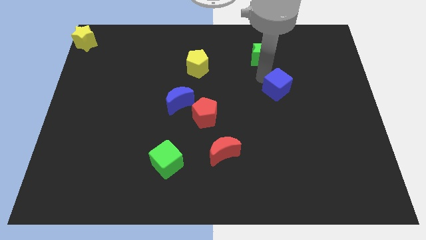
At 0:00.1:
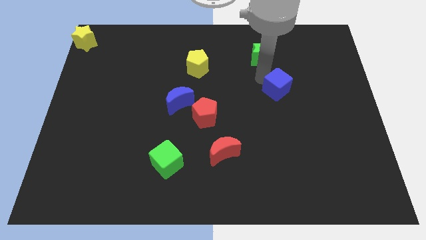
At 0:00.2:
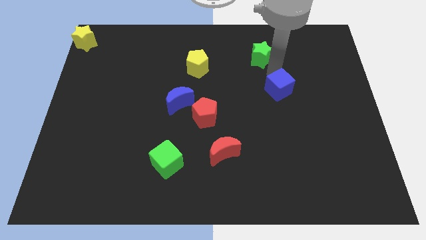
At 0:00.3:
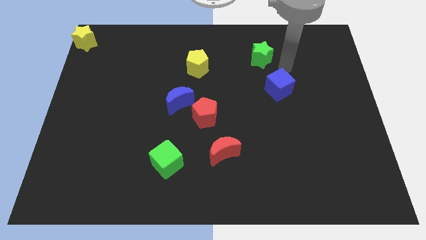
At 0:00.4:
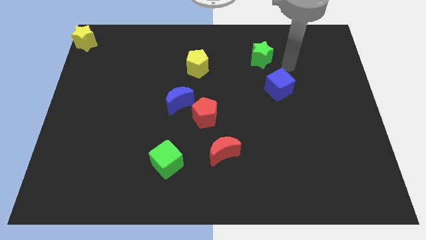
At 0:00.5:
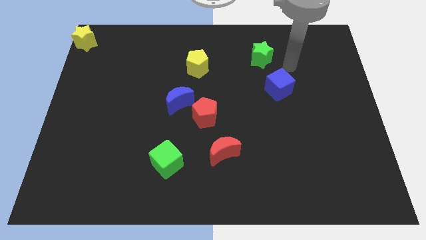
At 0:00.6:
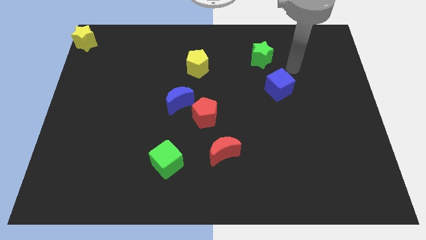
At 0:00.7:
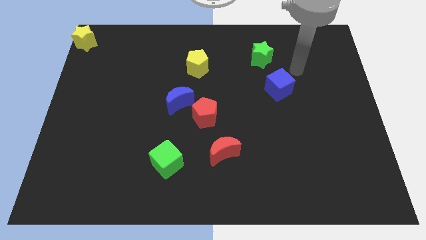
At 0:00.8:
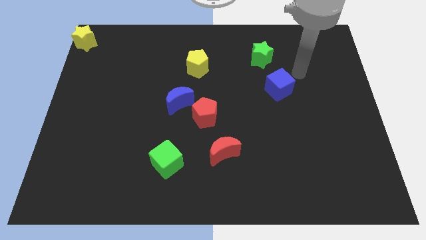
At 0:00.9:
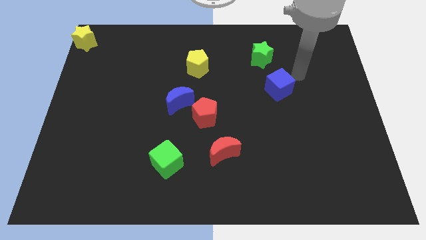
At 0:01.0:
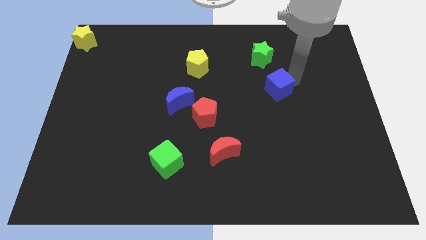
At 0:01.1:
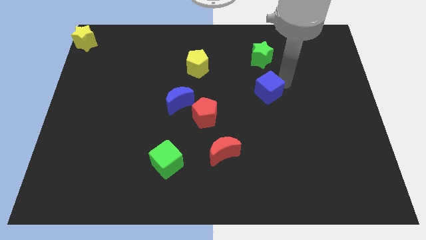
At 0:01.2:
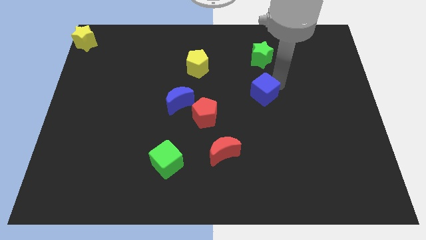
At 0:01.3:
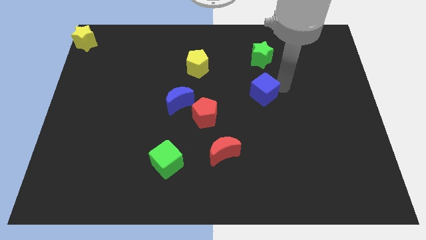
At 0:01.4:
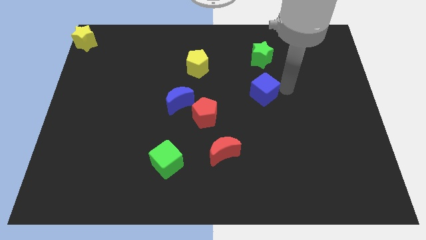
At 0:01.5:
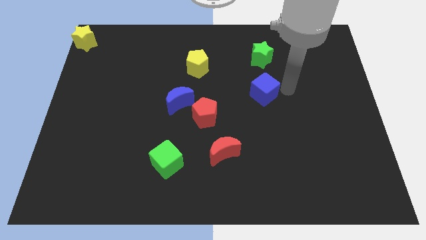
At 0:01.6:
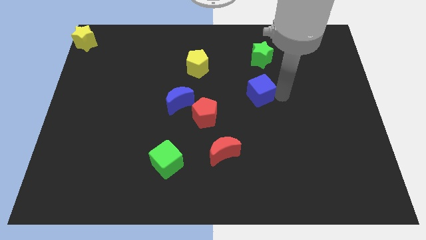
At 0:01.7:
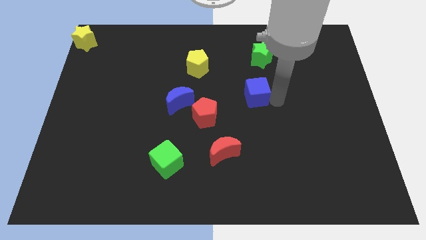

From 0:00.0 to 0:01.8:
put the blue cube diagonally on the top right side of the blue crescent

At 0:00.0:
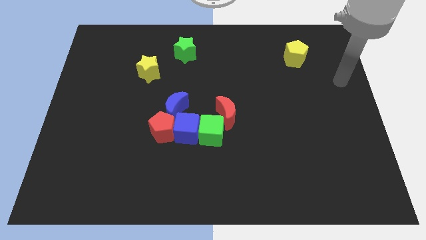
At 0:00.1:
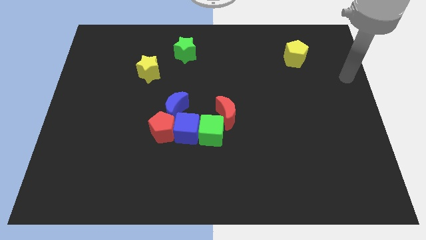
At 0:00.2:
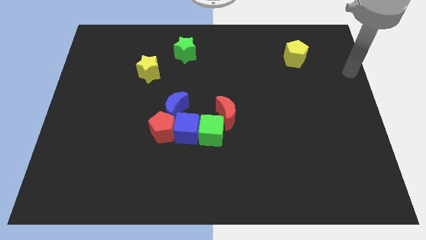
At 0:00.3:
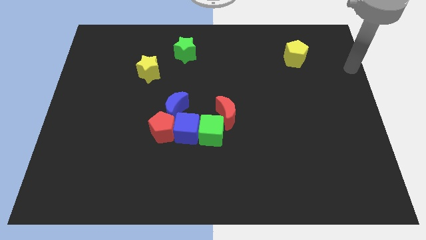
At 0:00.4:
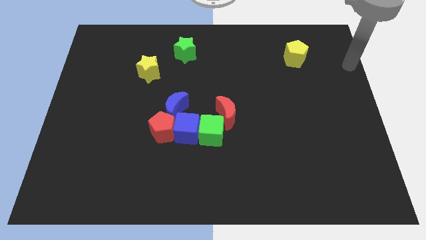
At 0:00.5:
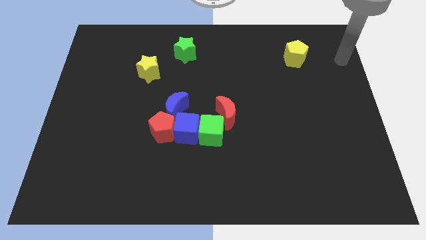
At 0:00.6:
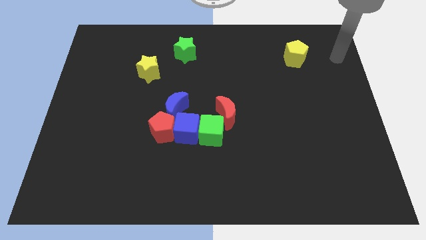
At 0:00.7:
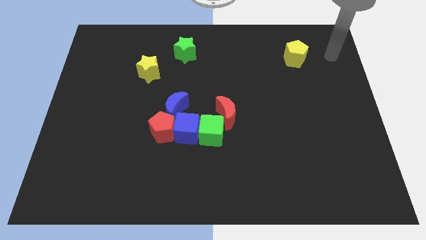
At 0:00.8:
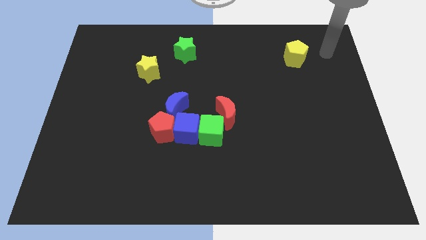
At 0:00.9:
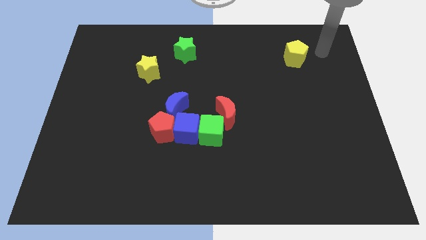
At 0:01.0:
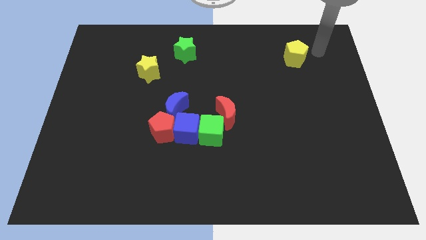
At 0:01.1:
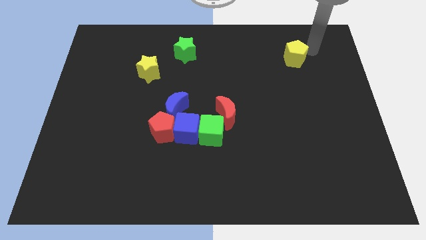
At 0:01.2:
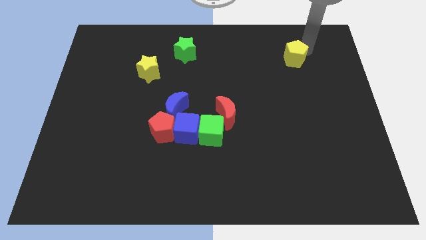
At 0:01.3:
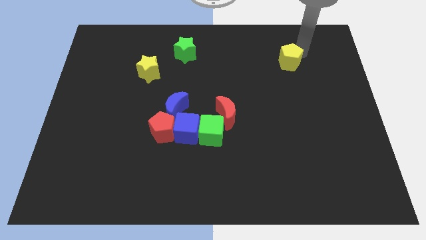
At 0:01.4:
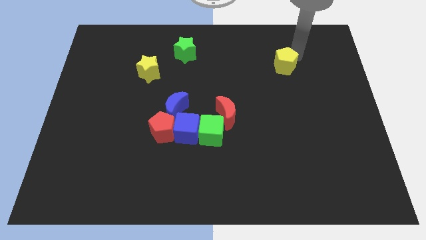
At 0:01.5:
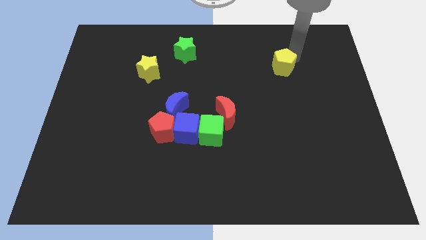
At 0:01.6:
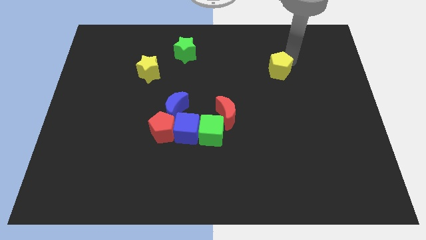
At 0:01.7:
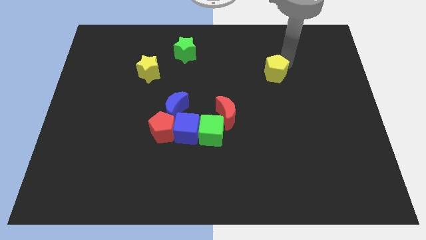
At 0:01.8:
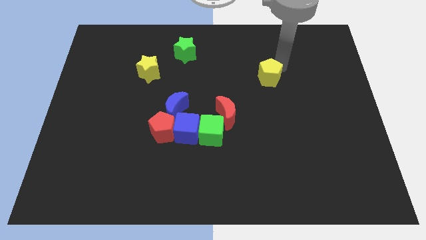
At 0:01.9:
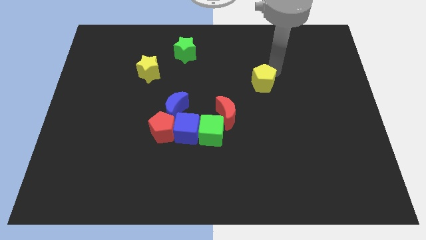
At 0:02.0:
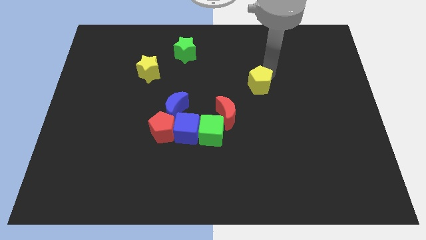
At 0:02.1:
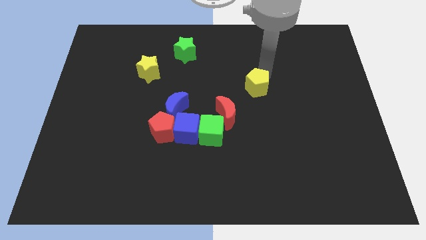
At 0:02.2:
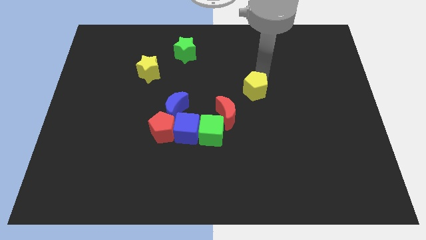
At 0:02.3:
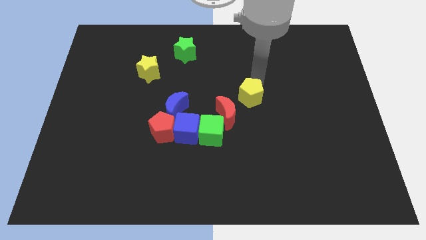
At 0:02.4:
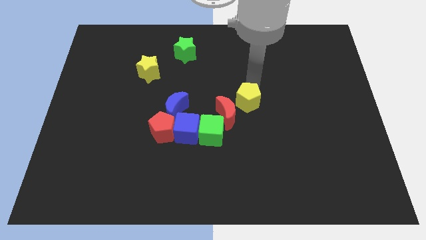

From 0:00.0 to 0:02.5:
place the yellow pentagon diagonally top right to the red moon

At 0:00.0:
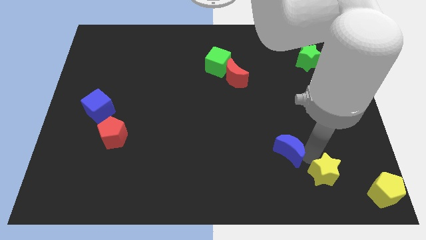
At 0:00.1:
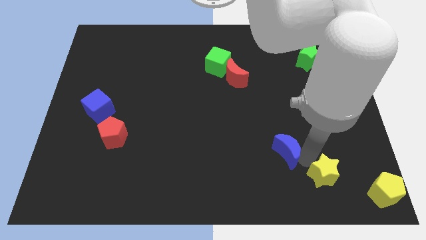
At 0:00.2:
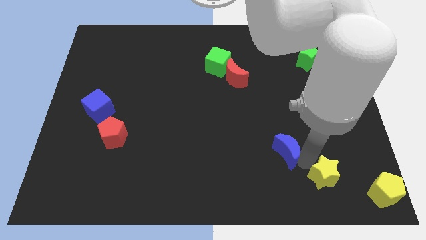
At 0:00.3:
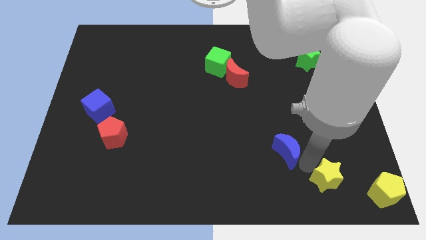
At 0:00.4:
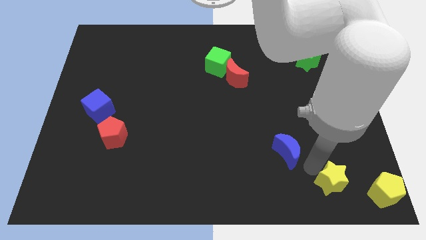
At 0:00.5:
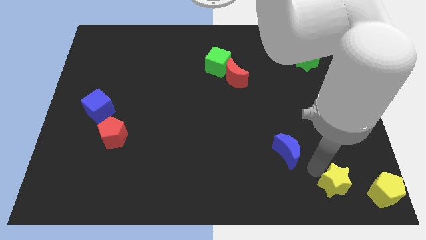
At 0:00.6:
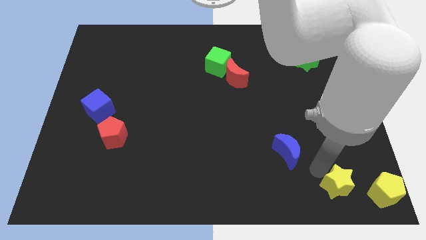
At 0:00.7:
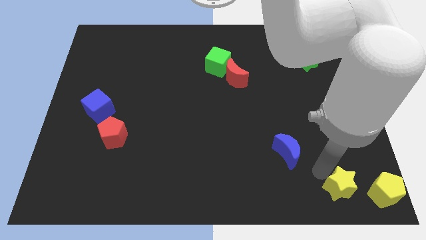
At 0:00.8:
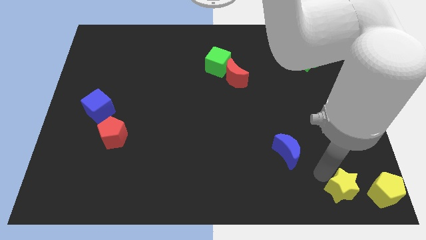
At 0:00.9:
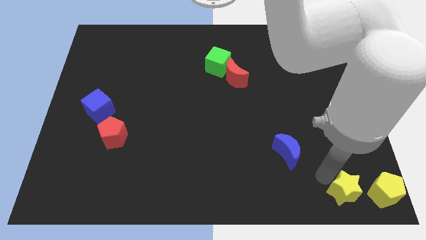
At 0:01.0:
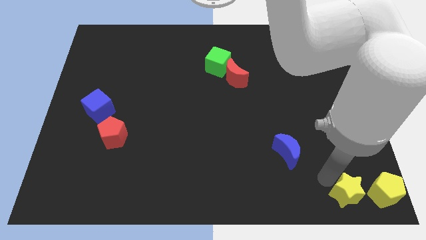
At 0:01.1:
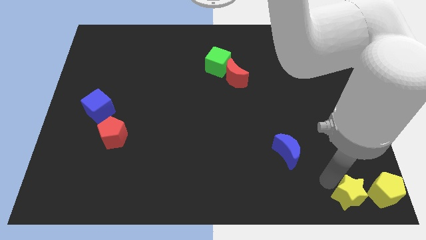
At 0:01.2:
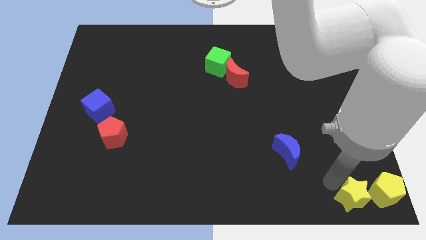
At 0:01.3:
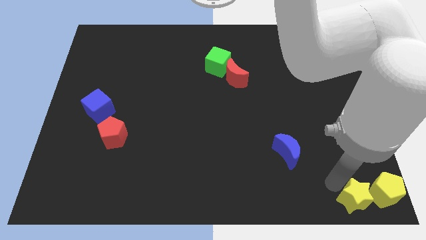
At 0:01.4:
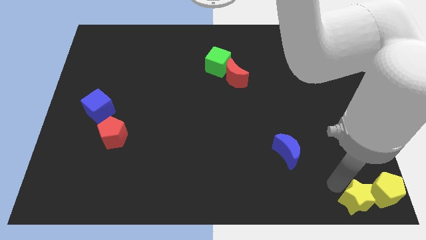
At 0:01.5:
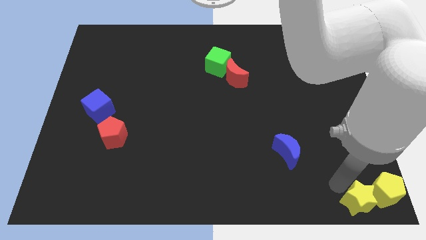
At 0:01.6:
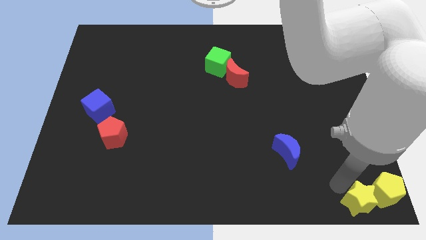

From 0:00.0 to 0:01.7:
push the yellow star closer to the yellow pentagon

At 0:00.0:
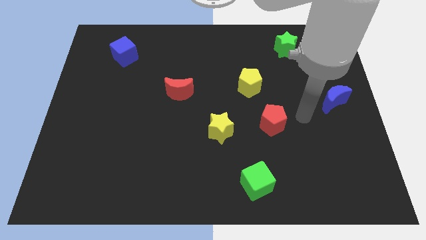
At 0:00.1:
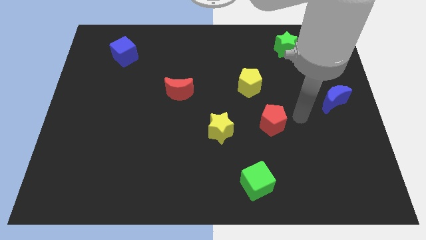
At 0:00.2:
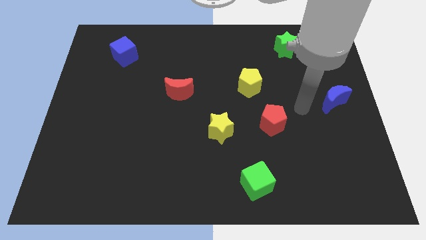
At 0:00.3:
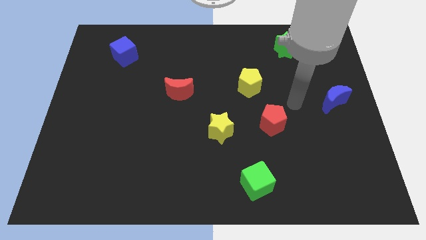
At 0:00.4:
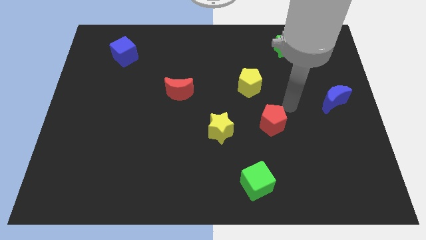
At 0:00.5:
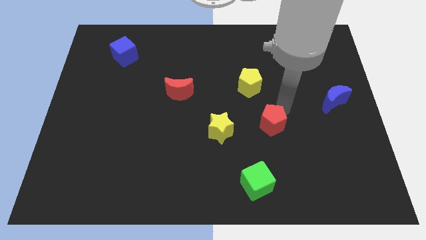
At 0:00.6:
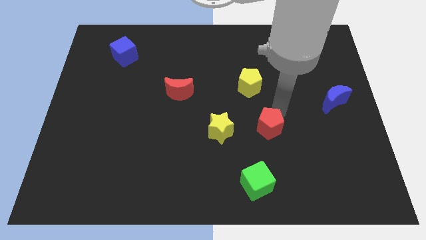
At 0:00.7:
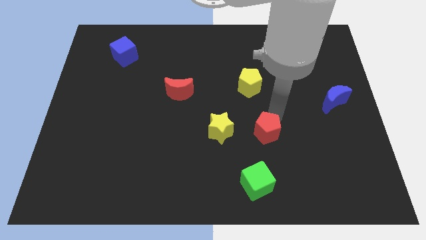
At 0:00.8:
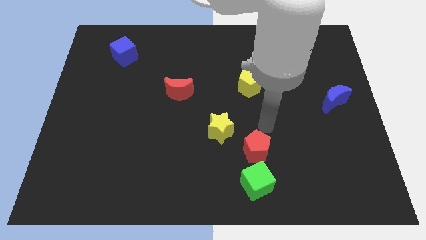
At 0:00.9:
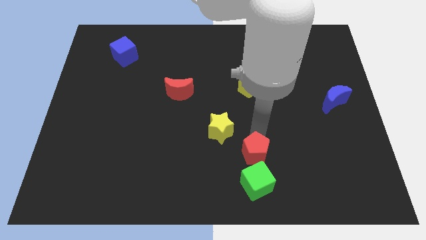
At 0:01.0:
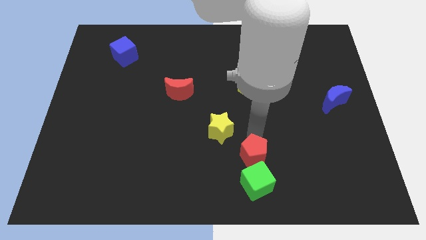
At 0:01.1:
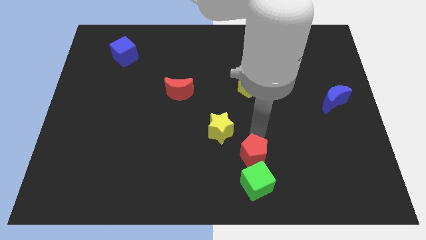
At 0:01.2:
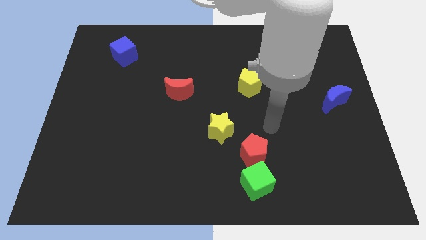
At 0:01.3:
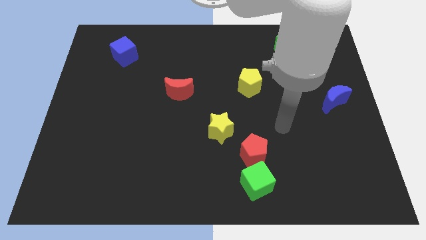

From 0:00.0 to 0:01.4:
push the red pentagon into the green cube

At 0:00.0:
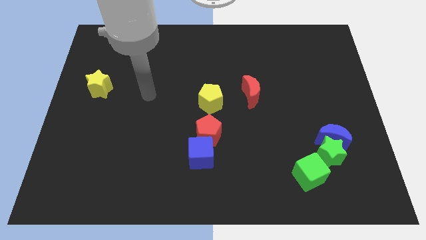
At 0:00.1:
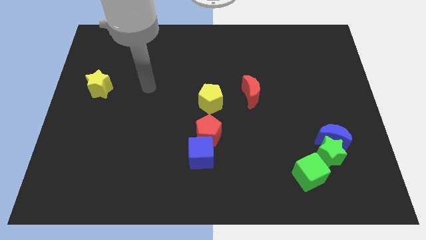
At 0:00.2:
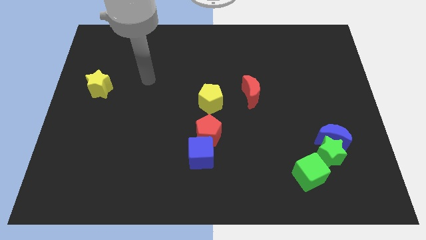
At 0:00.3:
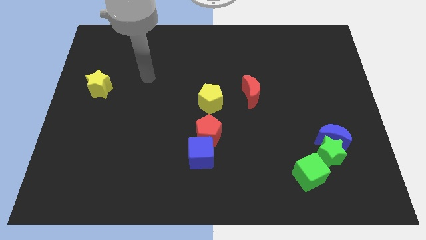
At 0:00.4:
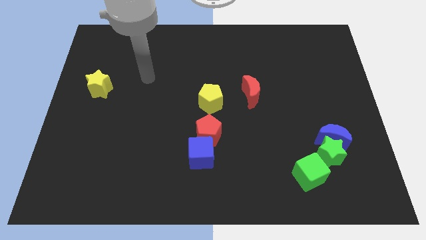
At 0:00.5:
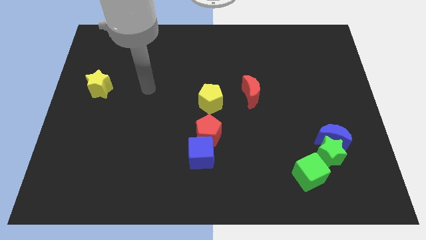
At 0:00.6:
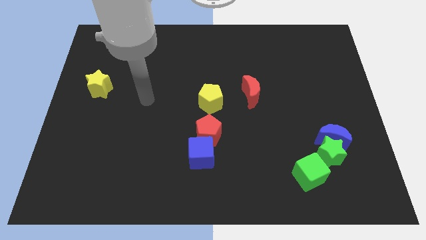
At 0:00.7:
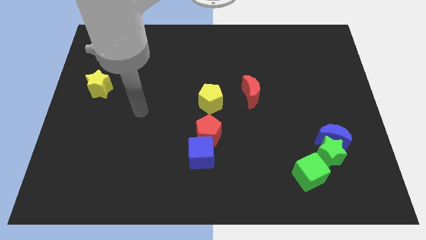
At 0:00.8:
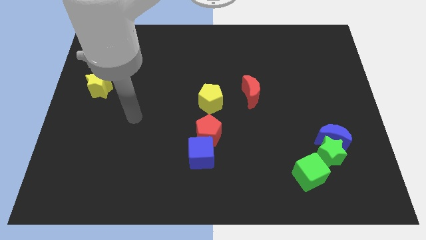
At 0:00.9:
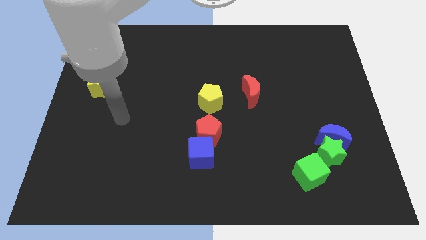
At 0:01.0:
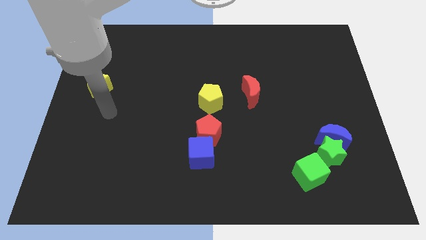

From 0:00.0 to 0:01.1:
slide the arm below the yellow star

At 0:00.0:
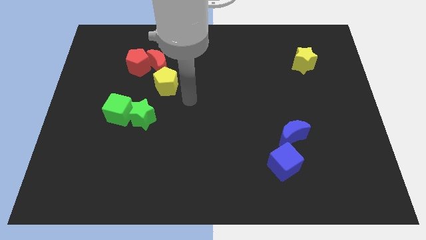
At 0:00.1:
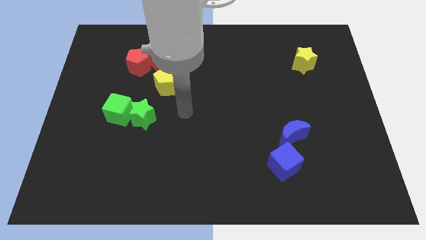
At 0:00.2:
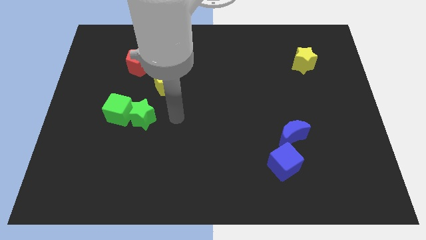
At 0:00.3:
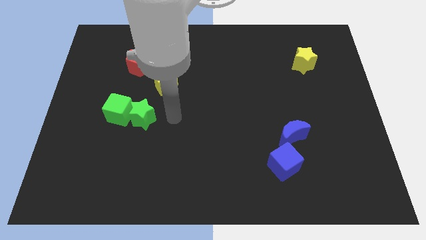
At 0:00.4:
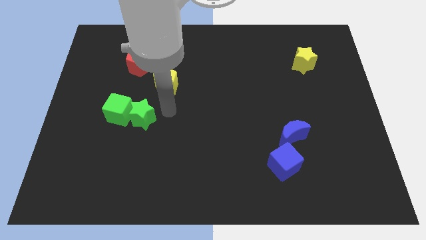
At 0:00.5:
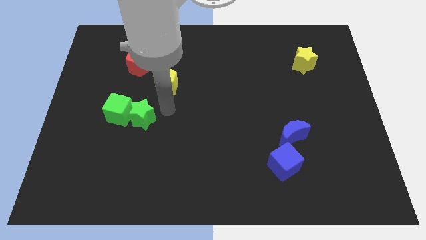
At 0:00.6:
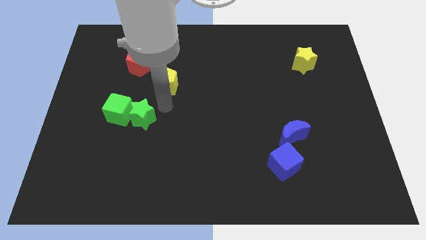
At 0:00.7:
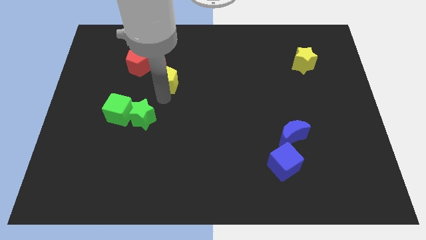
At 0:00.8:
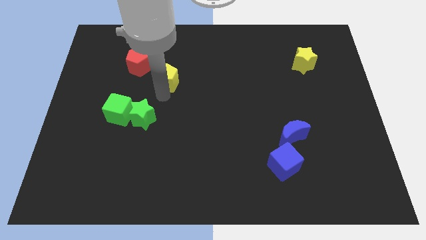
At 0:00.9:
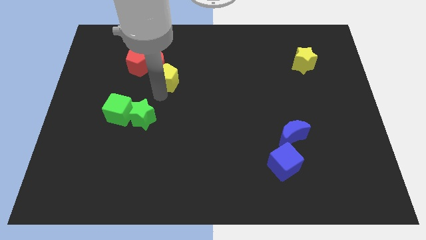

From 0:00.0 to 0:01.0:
slightly push the yellow pentagon into the red crescent
